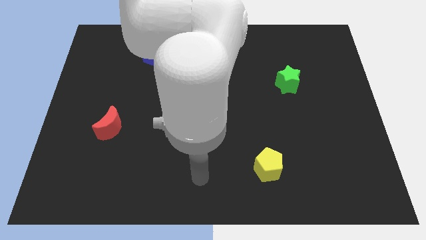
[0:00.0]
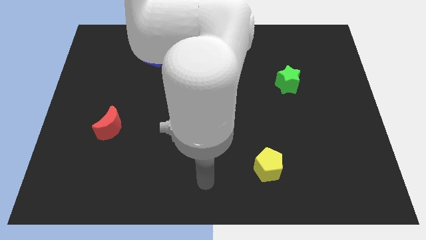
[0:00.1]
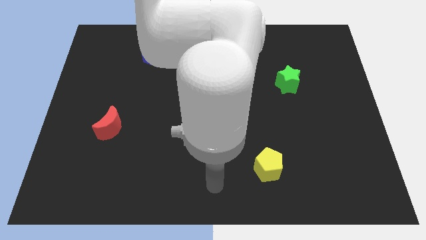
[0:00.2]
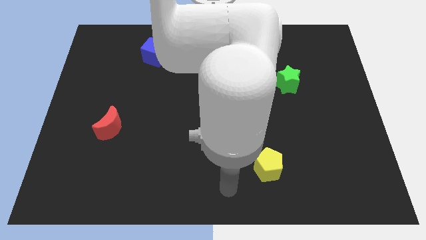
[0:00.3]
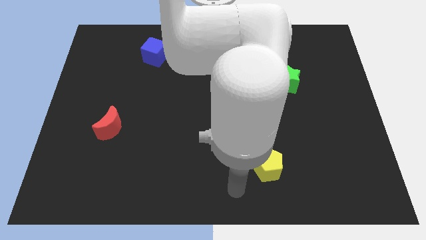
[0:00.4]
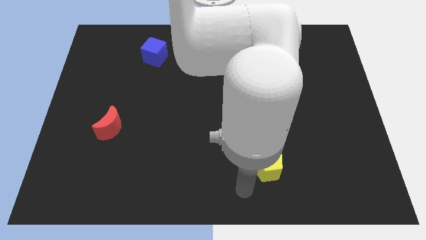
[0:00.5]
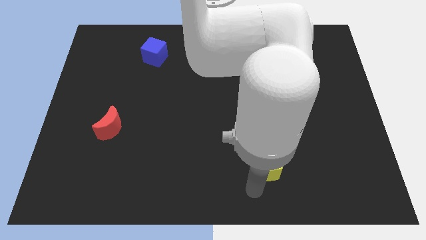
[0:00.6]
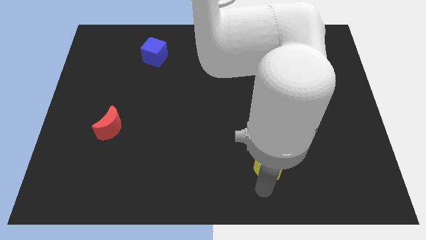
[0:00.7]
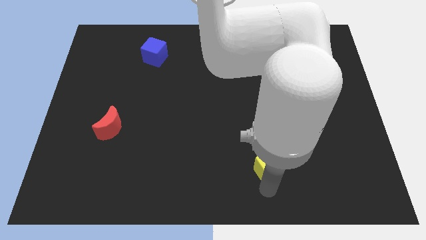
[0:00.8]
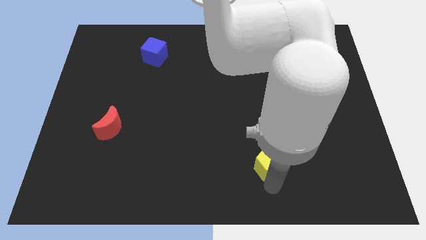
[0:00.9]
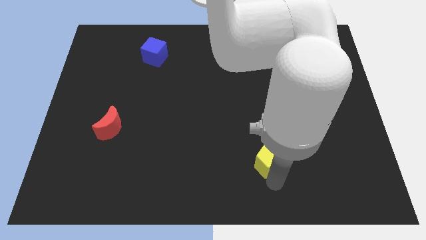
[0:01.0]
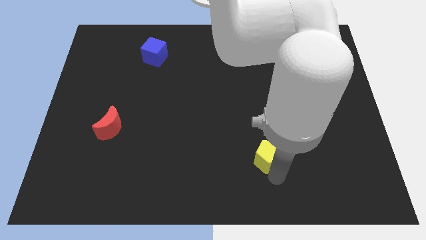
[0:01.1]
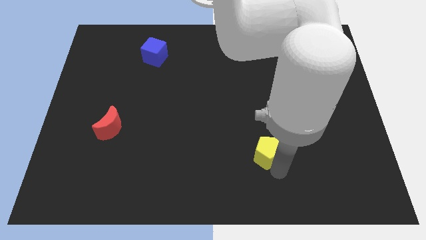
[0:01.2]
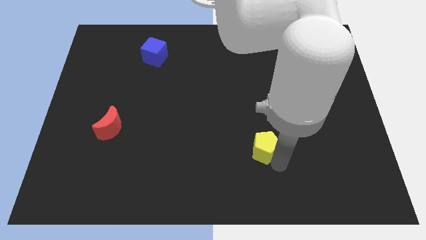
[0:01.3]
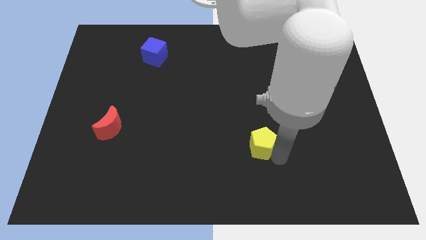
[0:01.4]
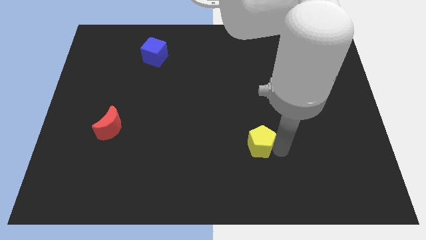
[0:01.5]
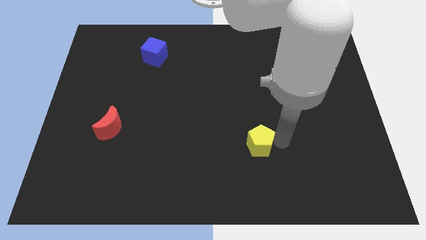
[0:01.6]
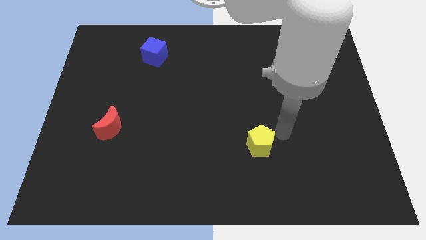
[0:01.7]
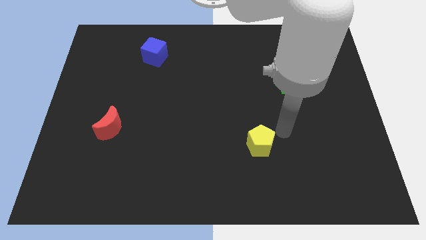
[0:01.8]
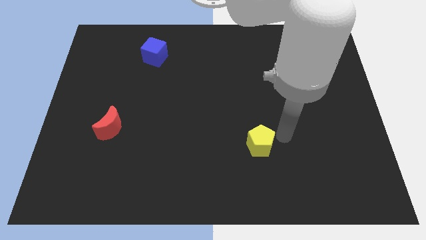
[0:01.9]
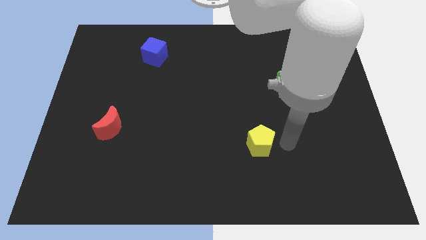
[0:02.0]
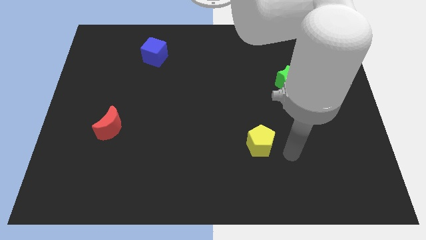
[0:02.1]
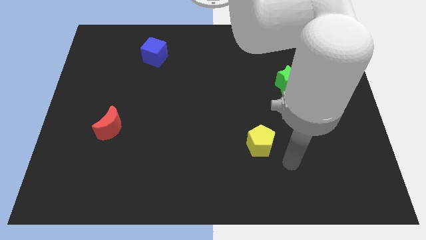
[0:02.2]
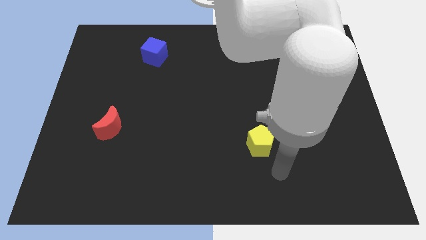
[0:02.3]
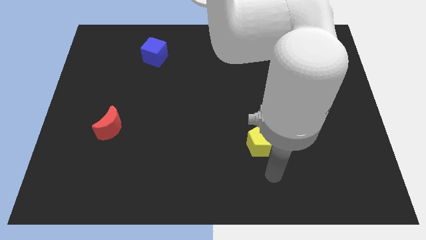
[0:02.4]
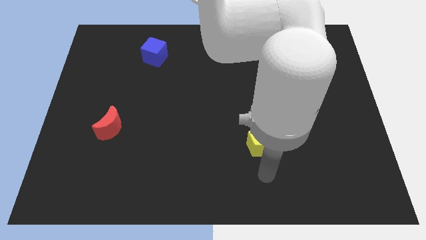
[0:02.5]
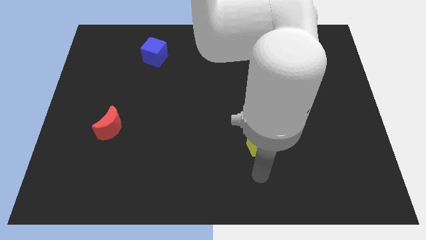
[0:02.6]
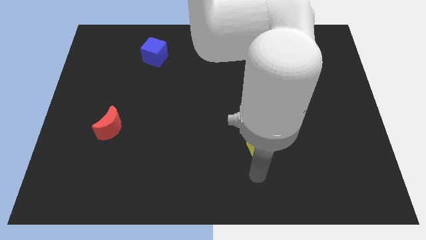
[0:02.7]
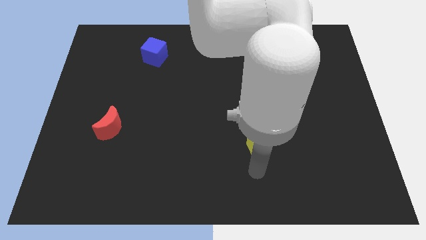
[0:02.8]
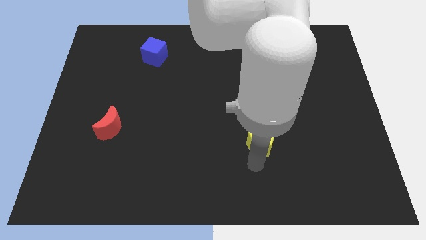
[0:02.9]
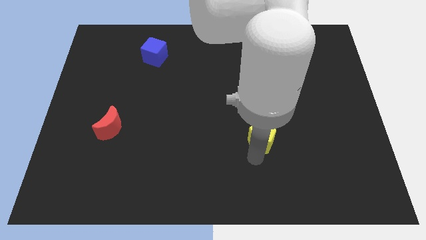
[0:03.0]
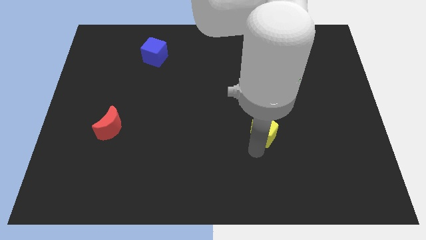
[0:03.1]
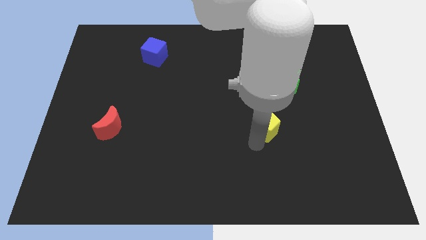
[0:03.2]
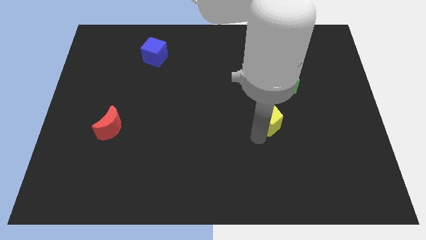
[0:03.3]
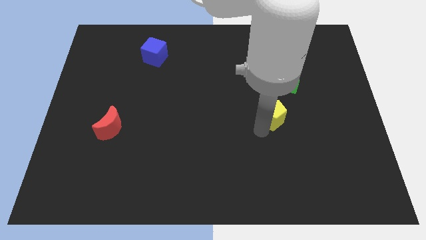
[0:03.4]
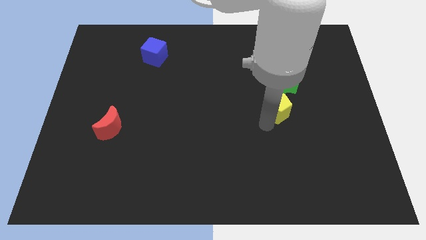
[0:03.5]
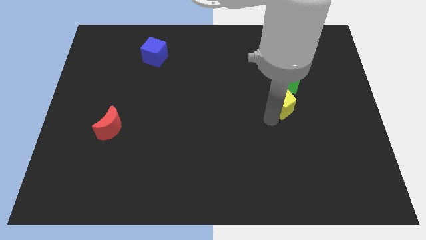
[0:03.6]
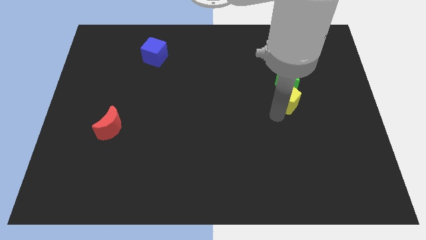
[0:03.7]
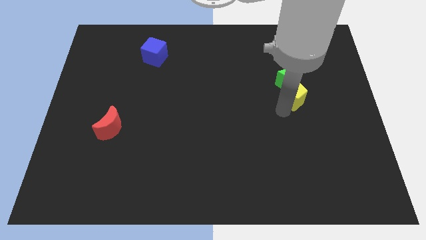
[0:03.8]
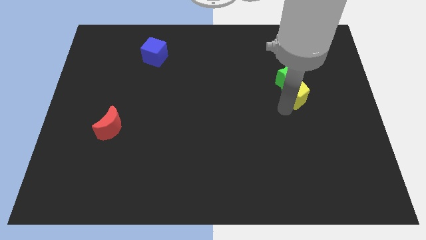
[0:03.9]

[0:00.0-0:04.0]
slide the yellow block towards the green block

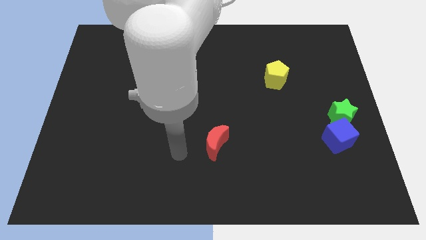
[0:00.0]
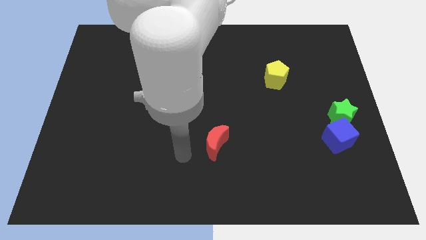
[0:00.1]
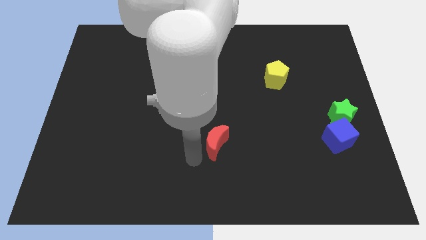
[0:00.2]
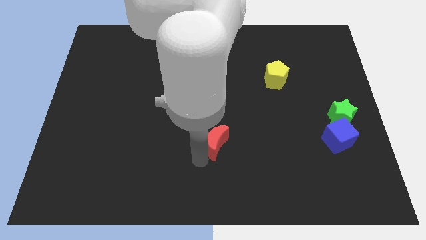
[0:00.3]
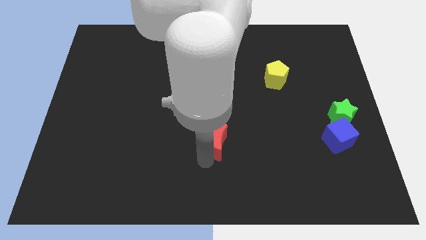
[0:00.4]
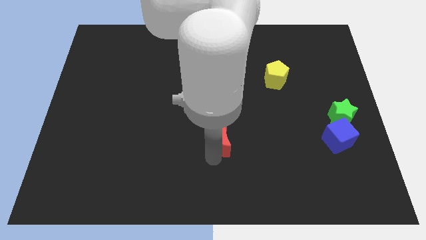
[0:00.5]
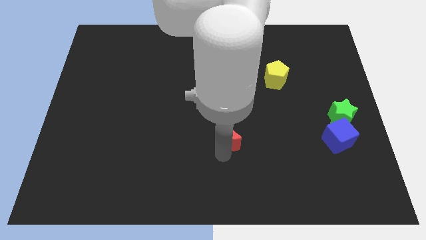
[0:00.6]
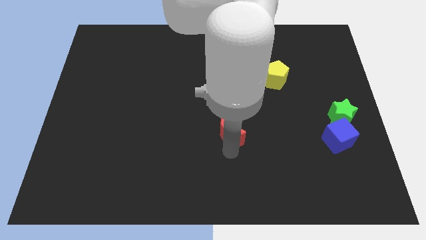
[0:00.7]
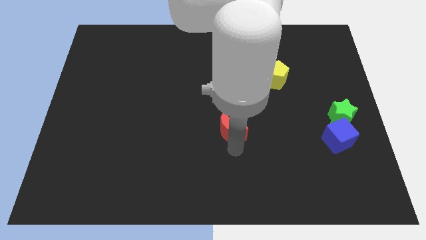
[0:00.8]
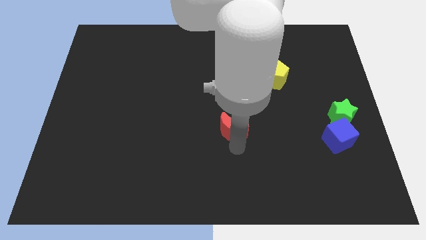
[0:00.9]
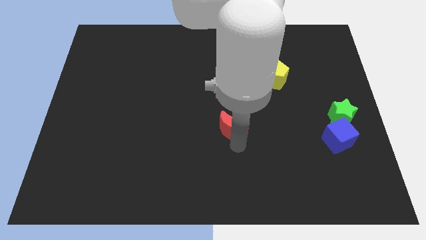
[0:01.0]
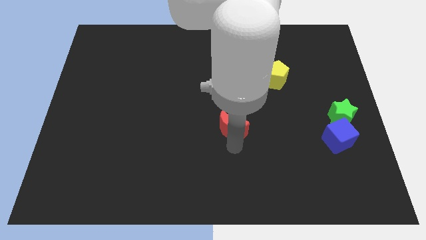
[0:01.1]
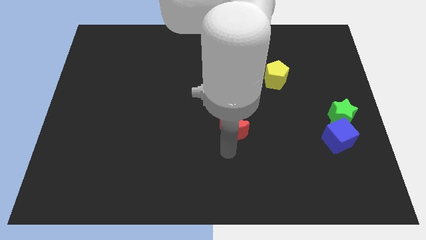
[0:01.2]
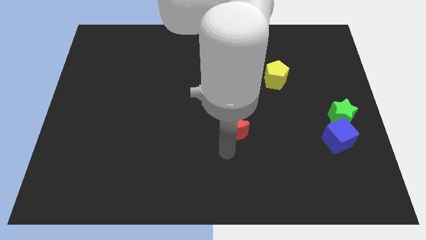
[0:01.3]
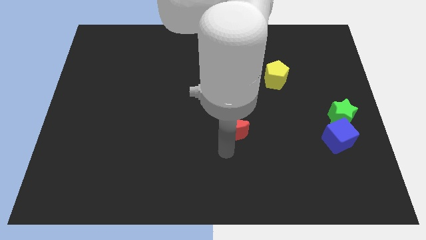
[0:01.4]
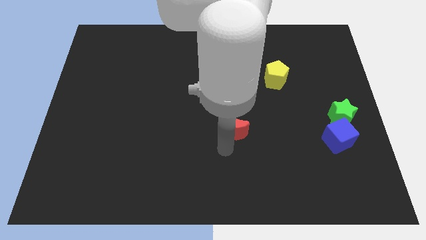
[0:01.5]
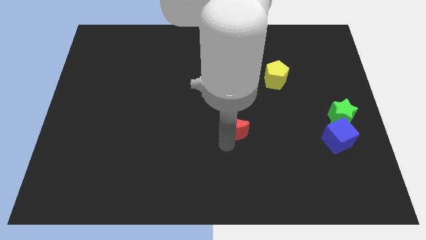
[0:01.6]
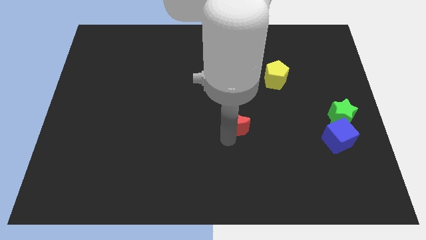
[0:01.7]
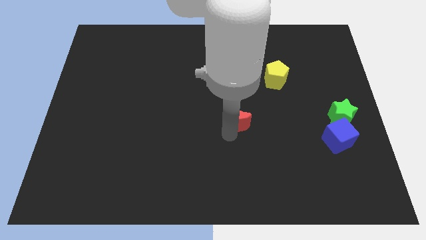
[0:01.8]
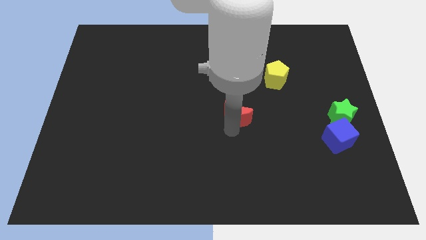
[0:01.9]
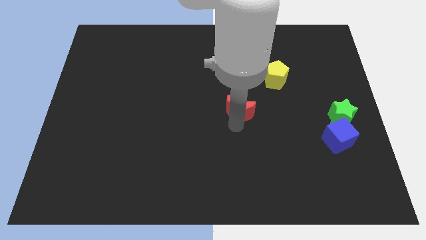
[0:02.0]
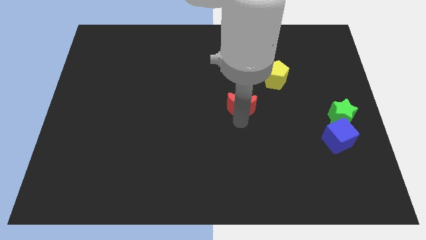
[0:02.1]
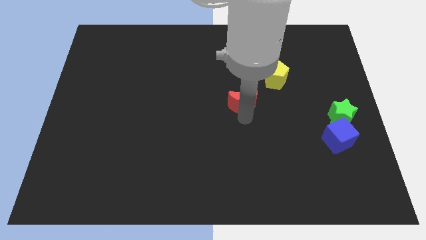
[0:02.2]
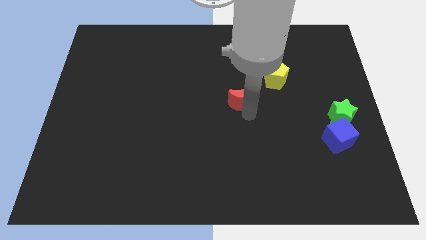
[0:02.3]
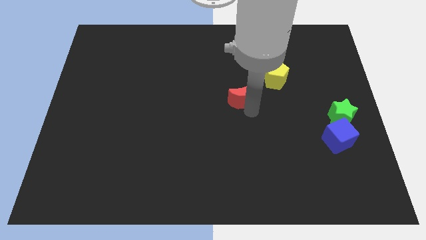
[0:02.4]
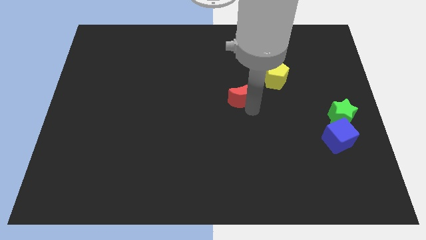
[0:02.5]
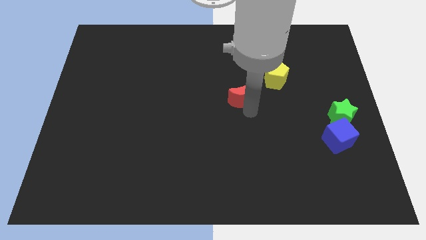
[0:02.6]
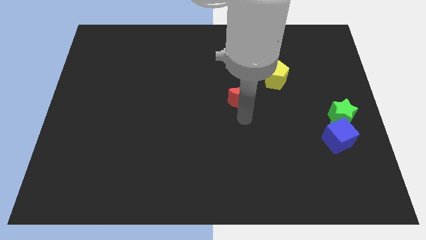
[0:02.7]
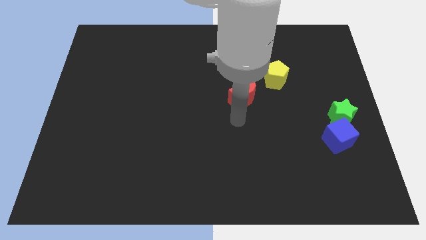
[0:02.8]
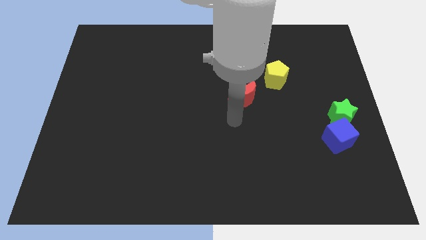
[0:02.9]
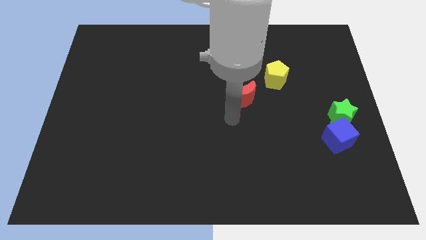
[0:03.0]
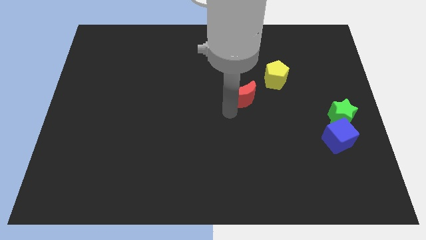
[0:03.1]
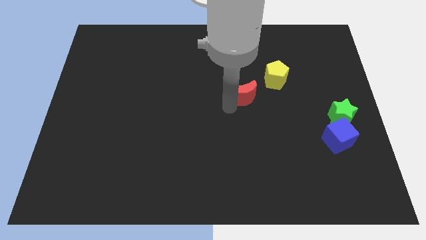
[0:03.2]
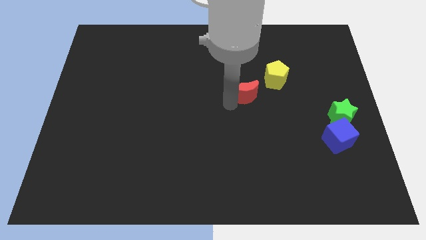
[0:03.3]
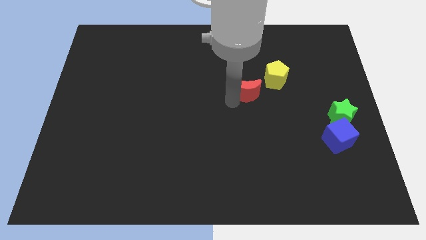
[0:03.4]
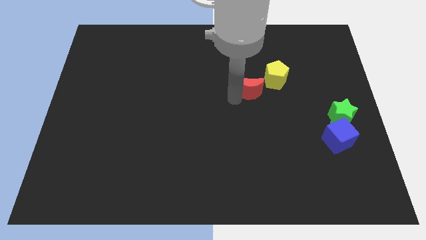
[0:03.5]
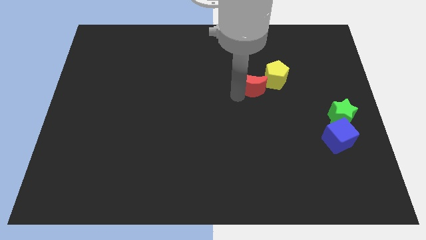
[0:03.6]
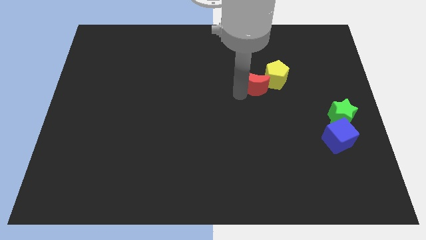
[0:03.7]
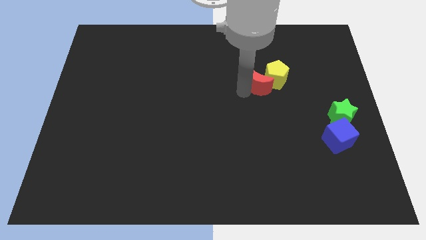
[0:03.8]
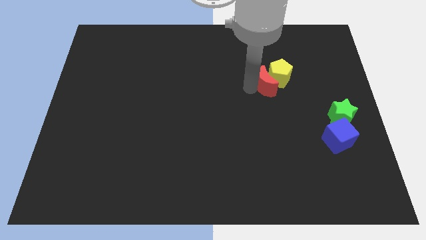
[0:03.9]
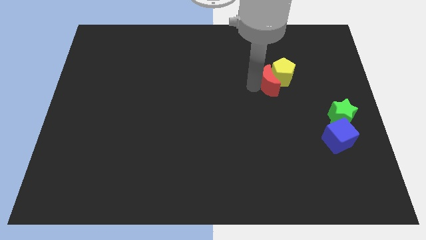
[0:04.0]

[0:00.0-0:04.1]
move the red moon next to the yellow pentagon

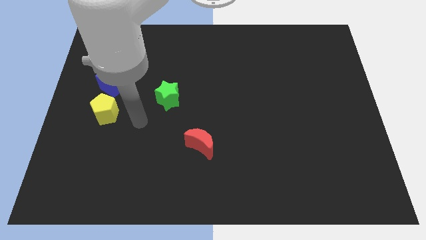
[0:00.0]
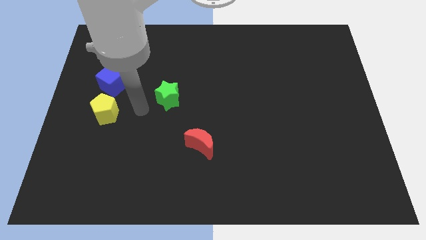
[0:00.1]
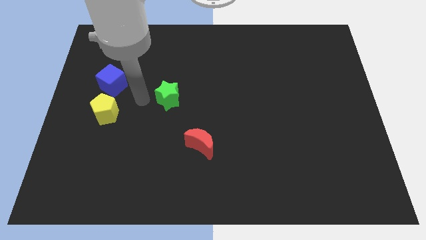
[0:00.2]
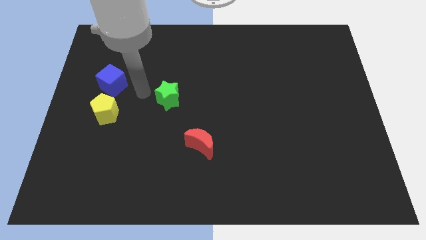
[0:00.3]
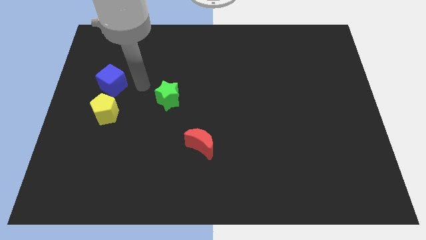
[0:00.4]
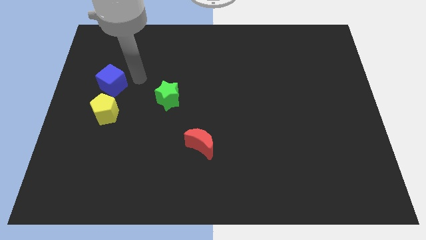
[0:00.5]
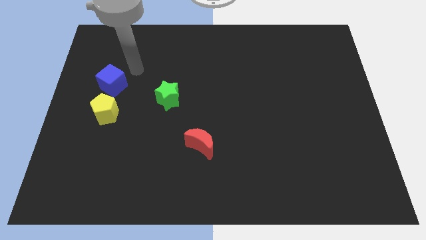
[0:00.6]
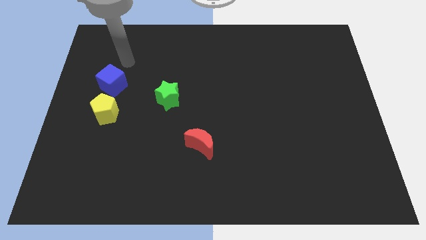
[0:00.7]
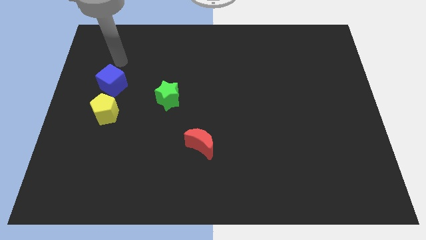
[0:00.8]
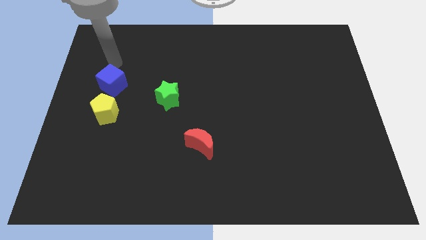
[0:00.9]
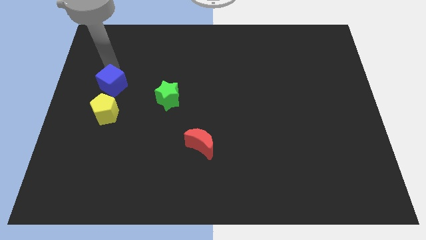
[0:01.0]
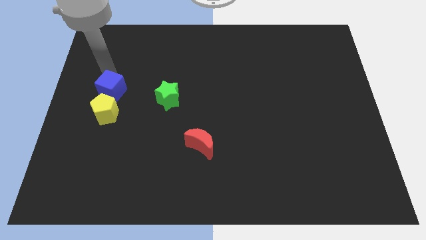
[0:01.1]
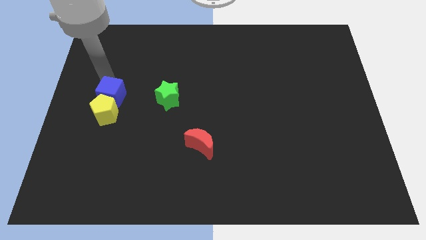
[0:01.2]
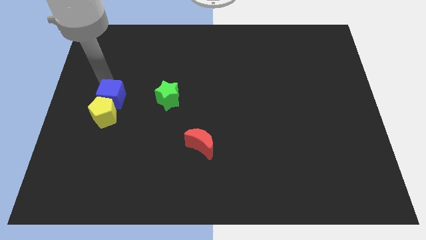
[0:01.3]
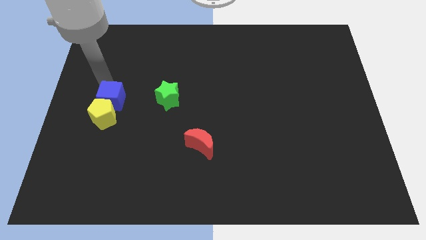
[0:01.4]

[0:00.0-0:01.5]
push the cube next to the pentagon
